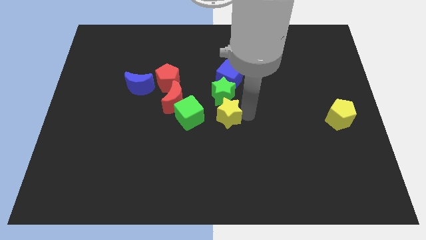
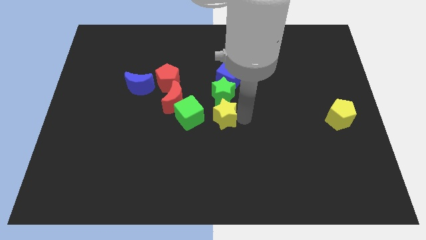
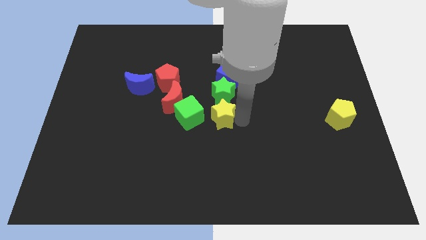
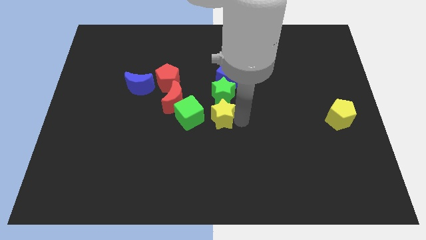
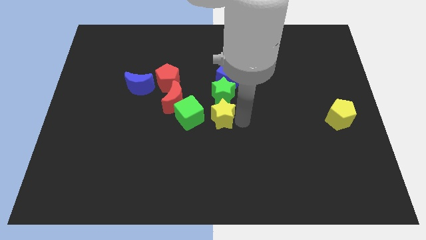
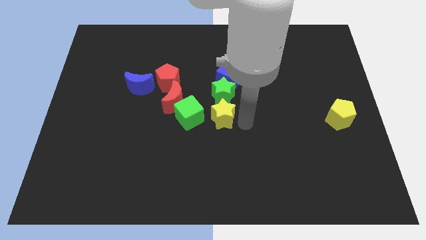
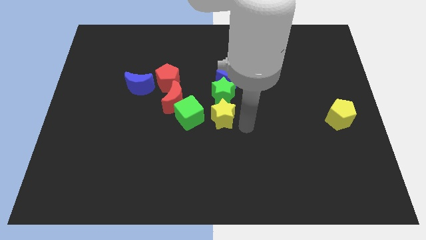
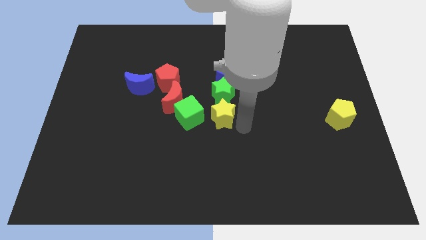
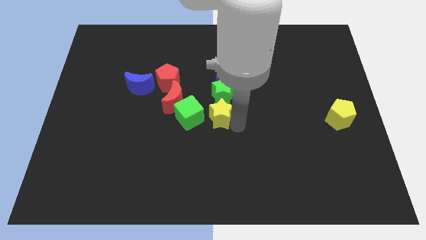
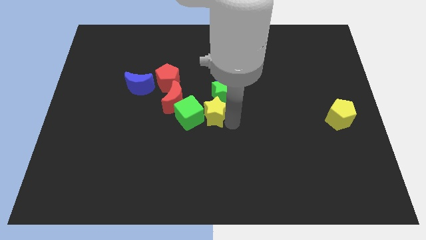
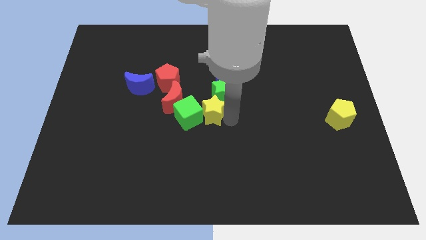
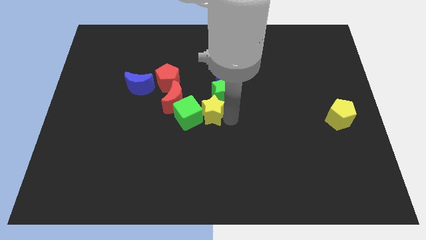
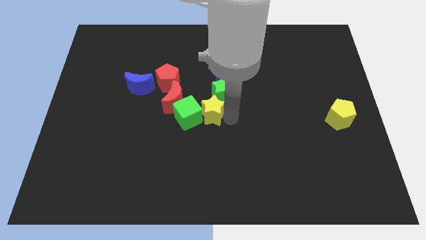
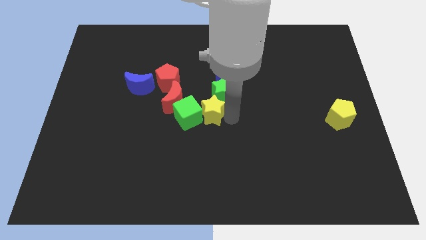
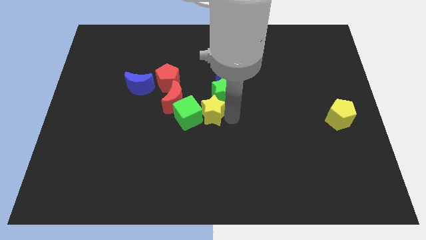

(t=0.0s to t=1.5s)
place the yellow star right to the green cube

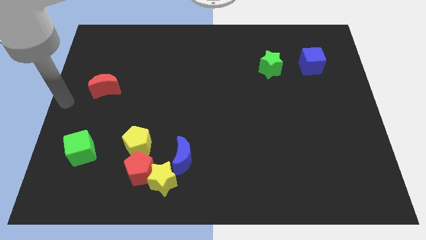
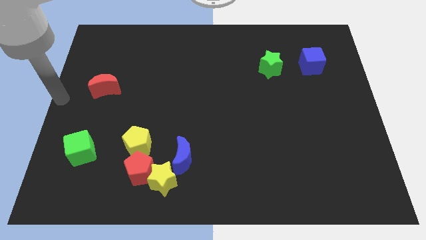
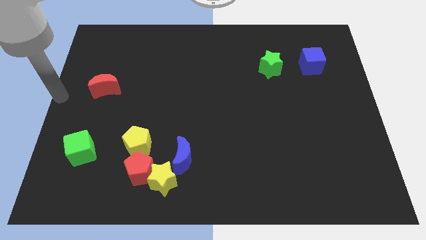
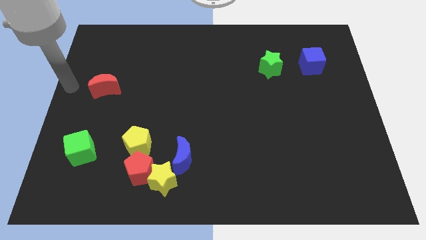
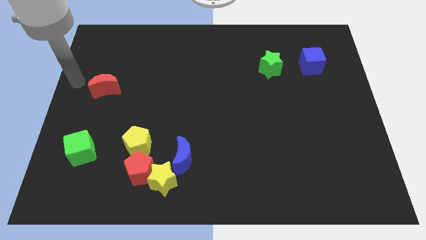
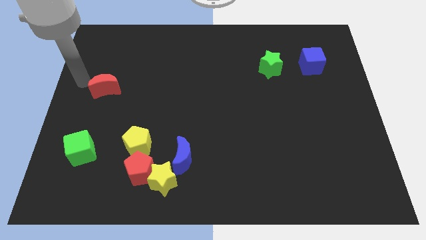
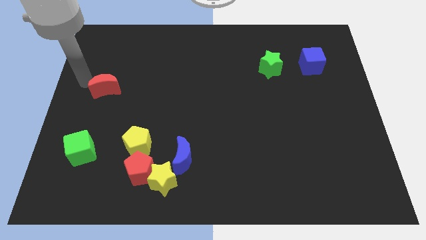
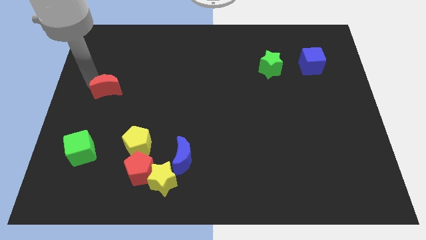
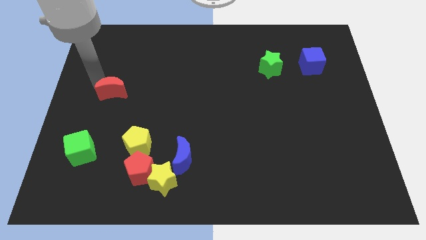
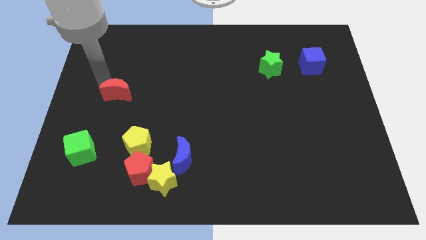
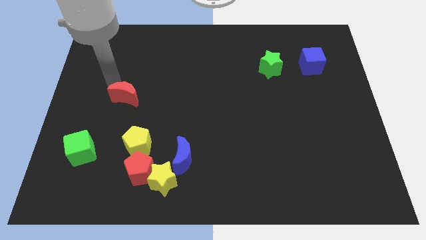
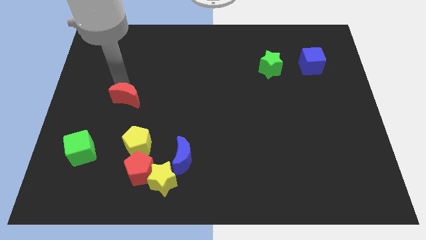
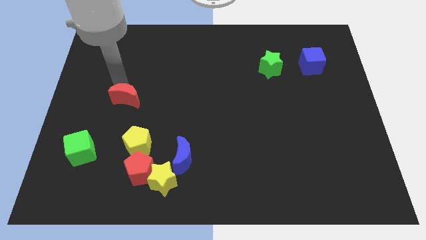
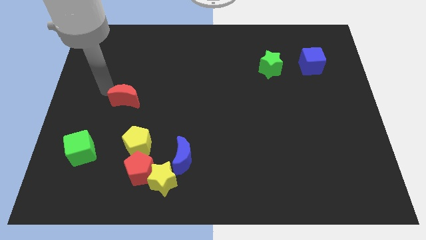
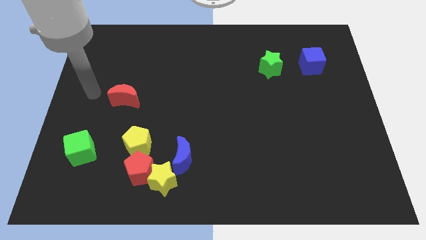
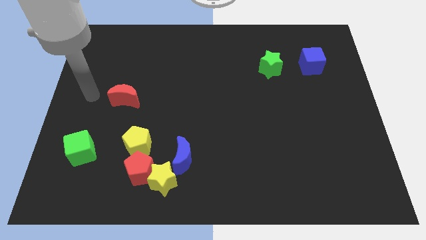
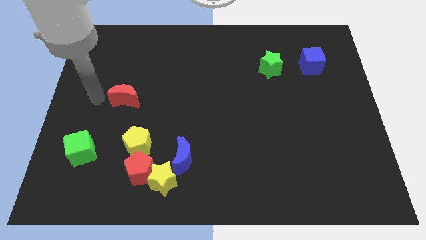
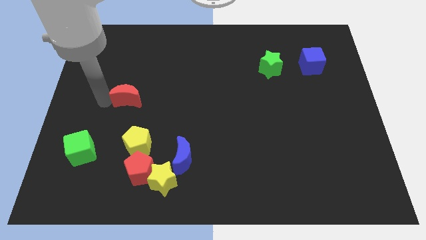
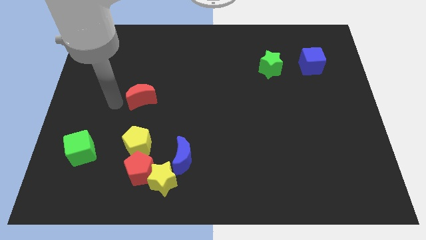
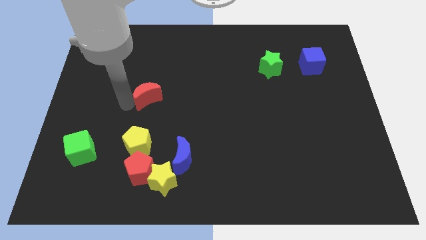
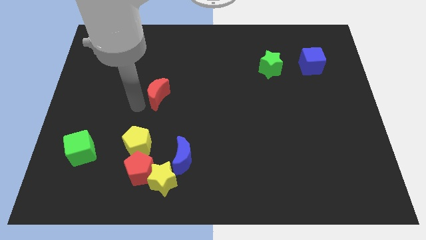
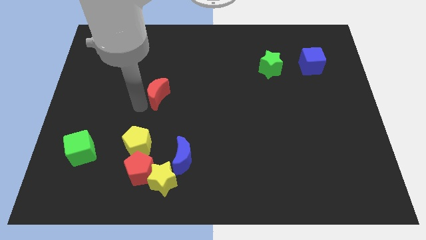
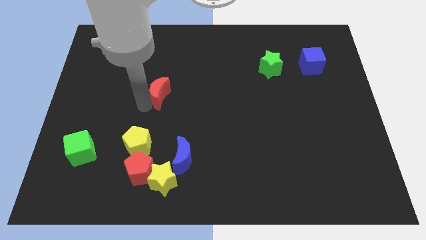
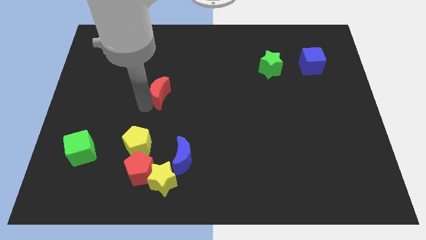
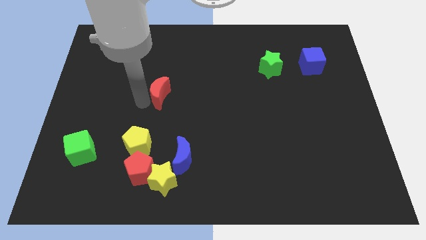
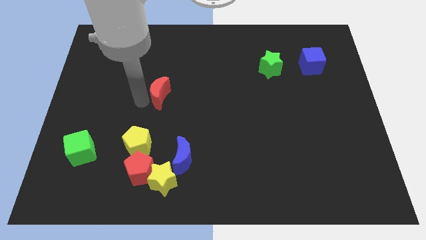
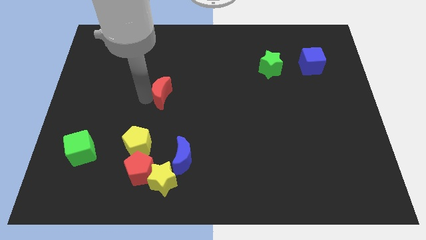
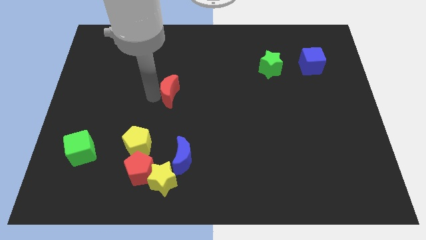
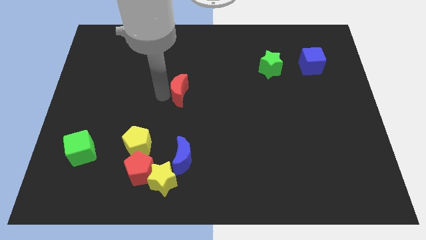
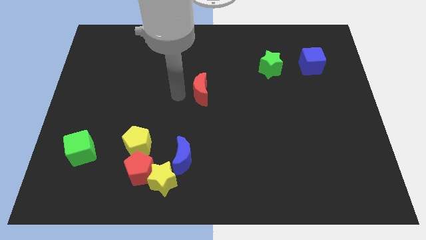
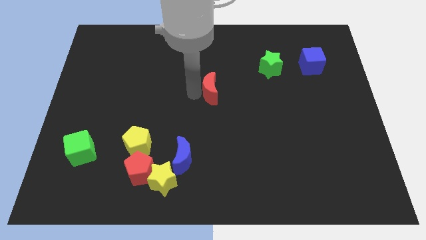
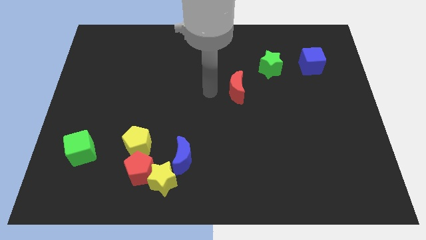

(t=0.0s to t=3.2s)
push the red crescent to the center of the board

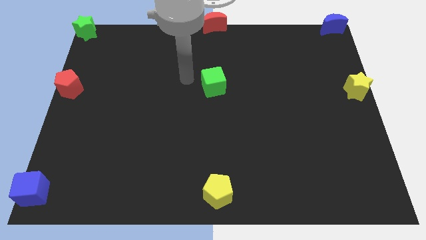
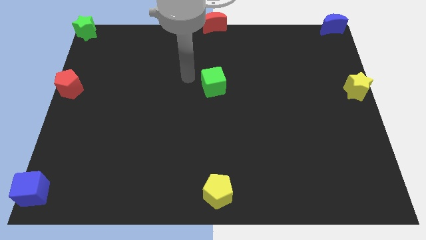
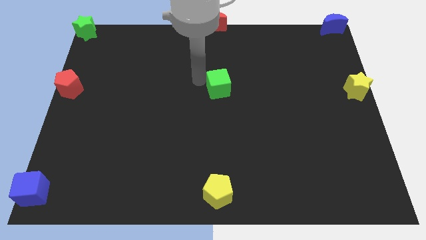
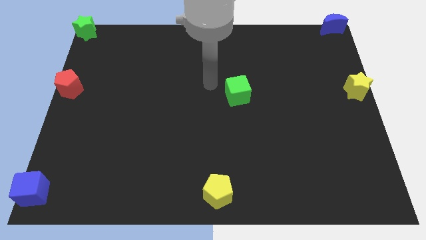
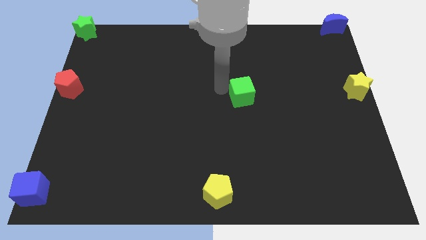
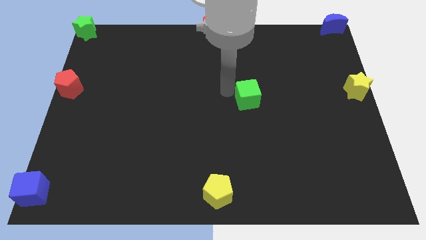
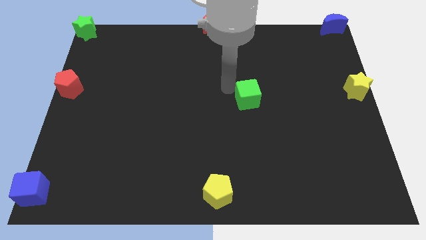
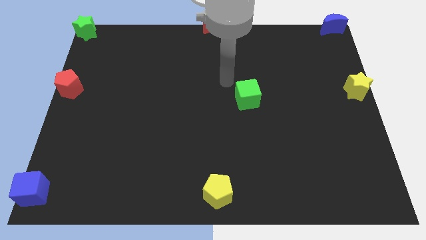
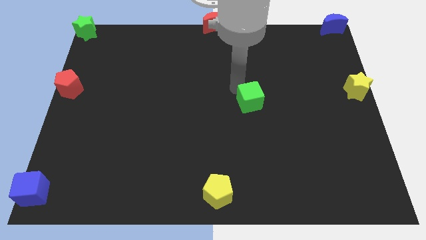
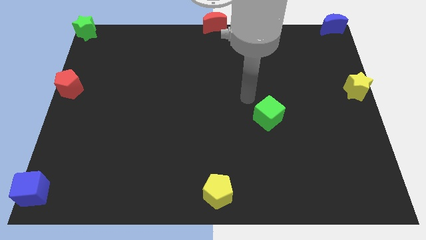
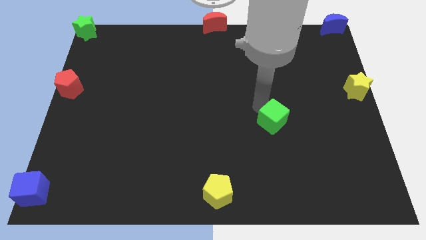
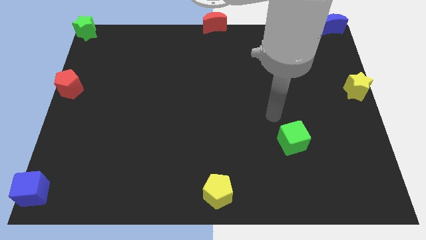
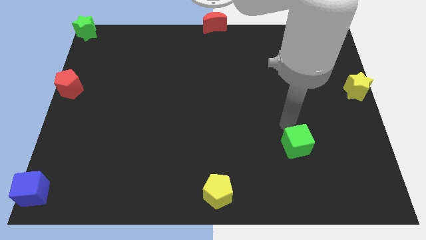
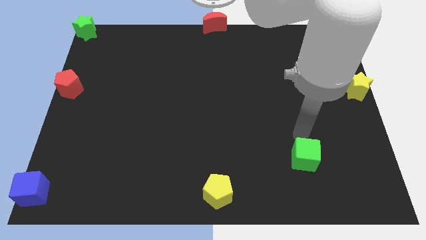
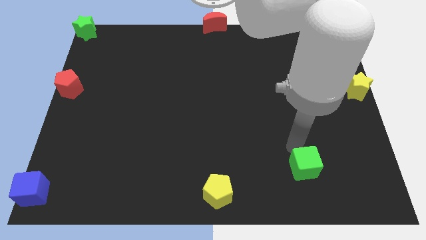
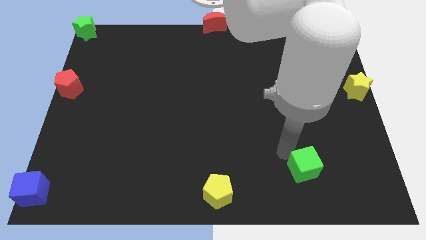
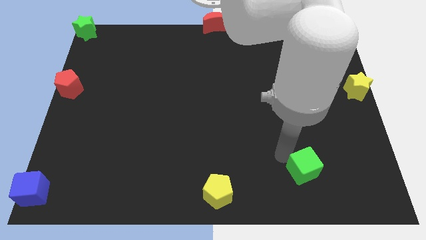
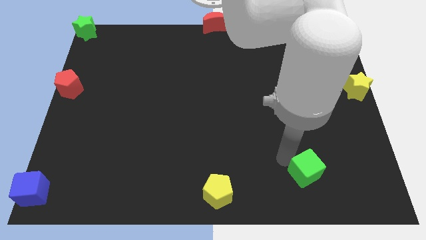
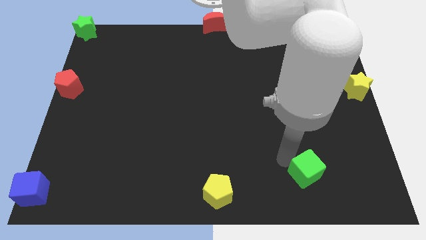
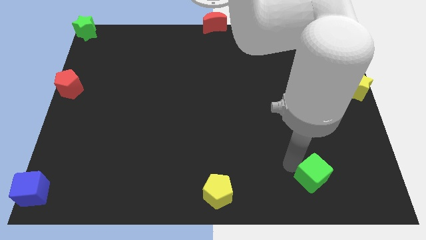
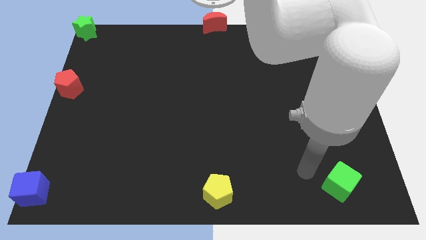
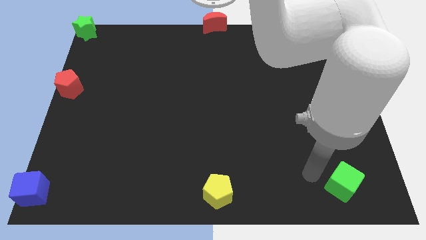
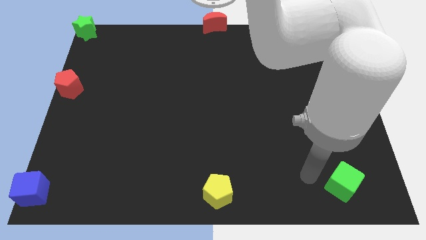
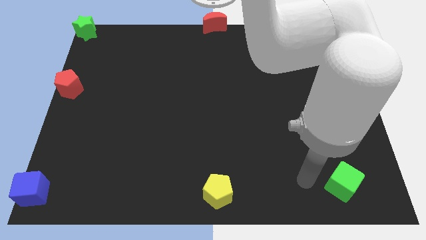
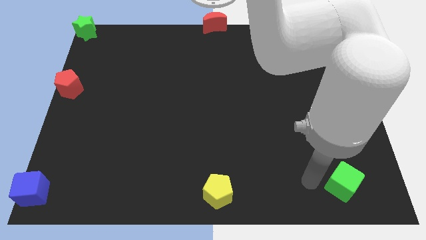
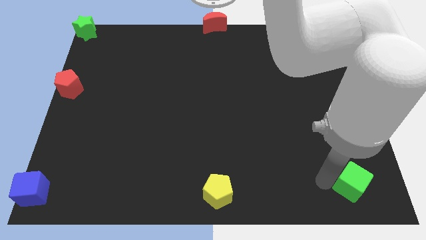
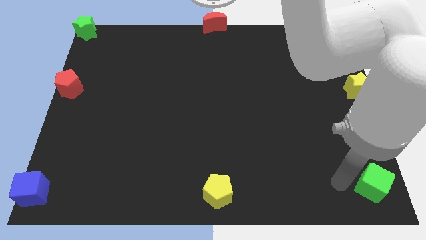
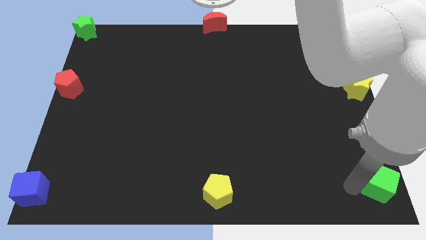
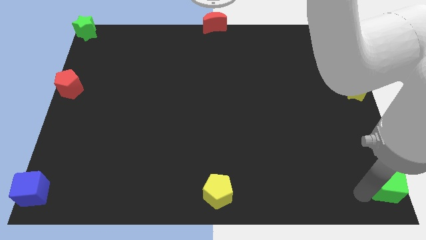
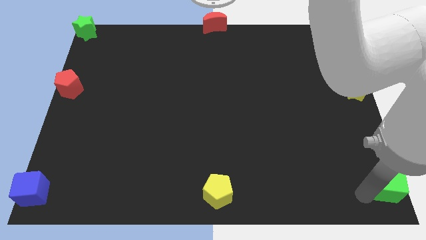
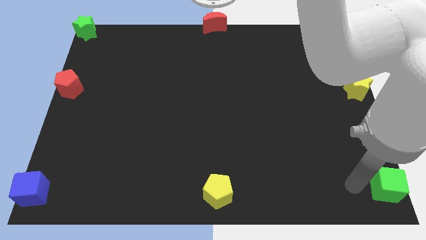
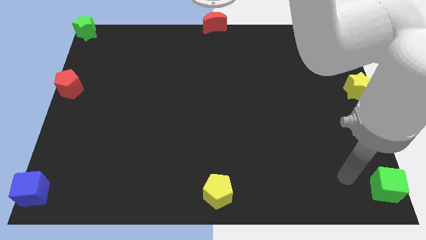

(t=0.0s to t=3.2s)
move the green cube to the bottom right corner of the board

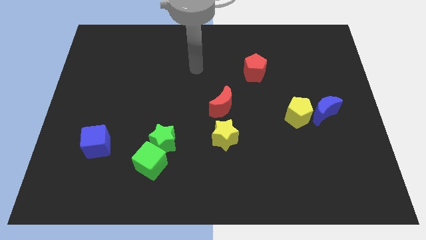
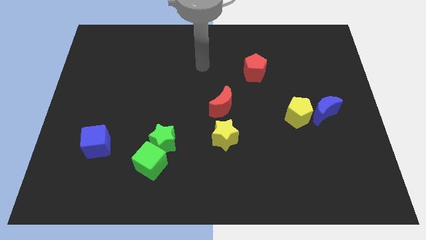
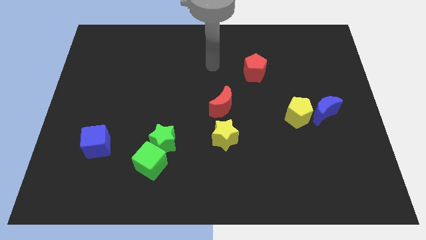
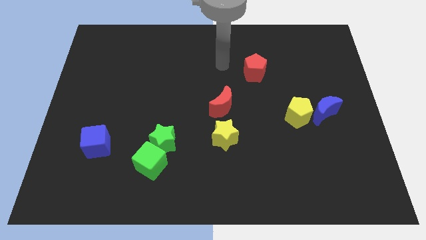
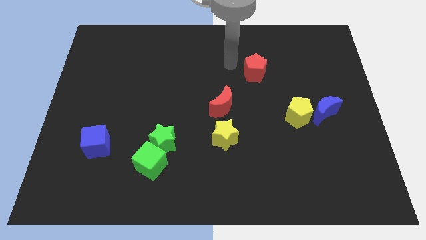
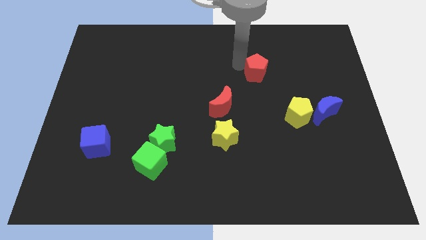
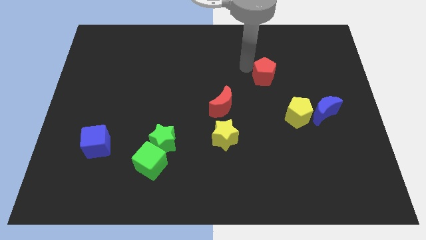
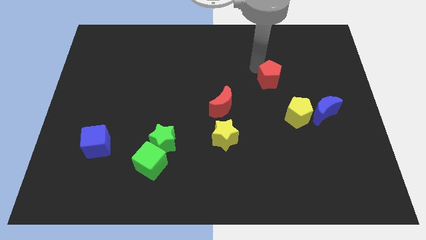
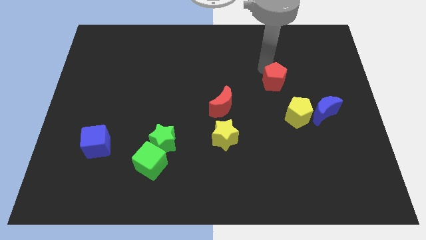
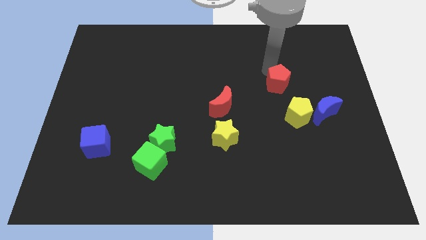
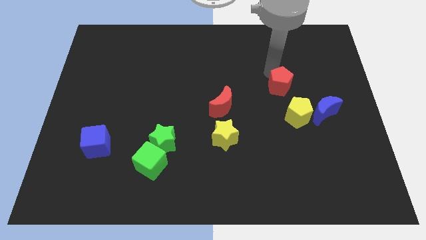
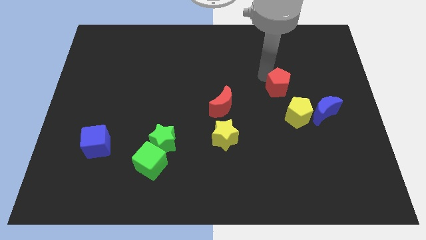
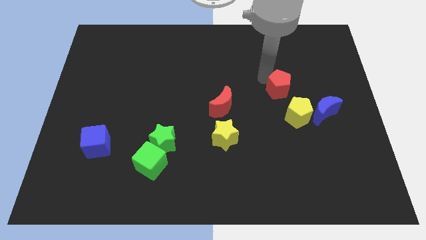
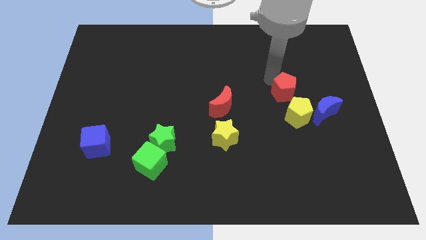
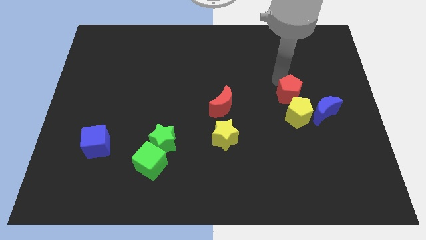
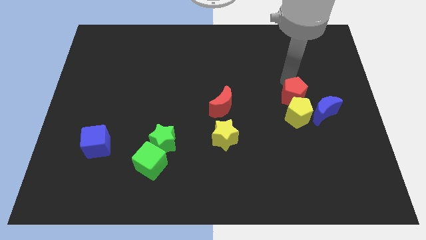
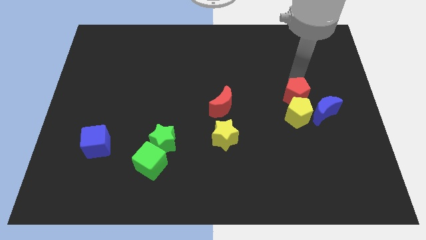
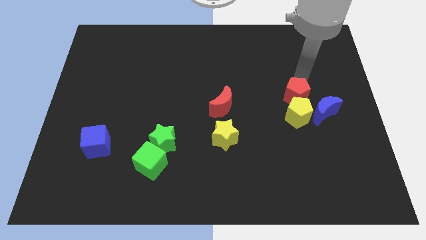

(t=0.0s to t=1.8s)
move the red pentagon on top of the yellow pentagon
